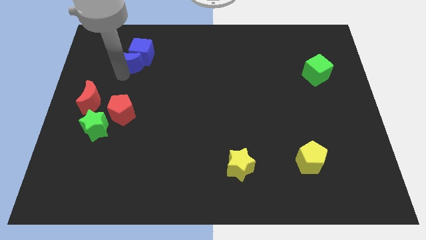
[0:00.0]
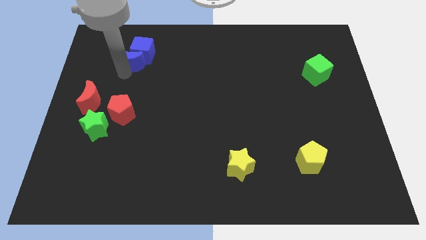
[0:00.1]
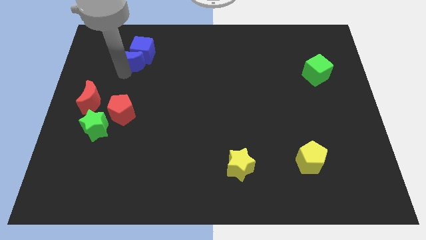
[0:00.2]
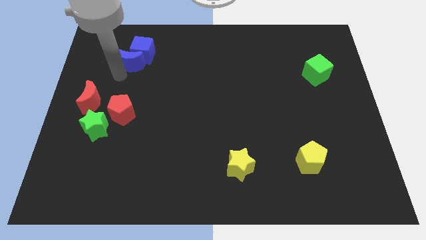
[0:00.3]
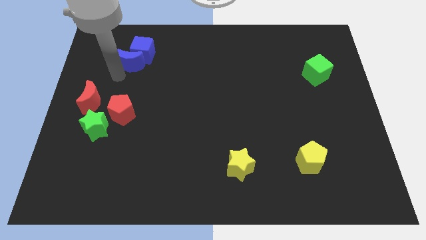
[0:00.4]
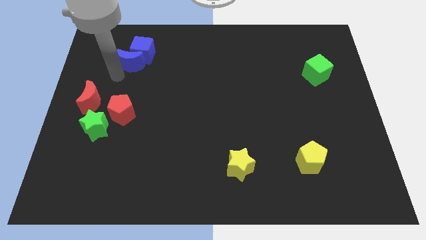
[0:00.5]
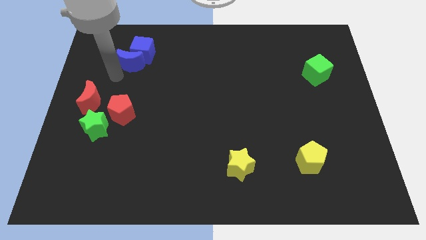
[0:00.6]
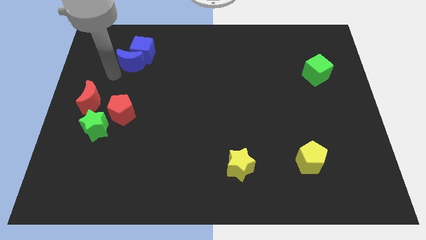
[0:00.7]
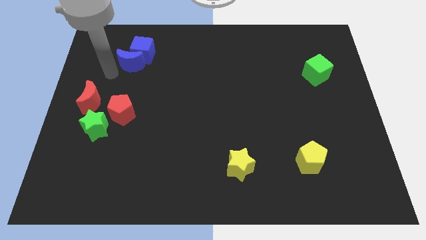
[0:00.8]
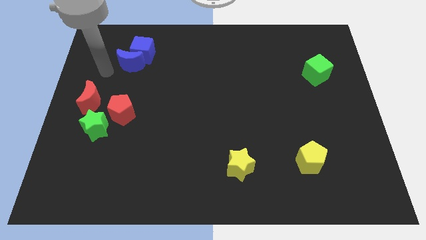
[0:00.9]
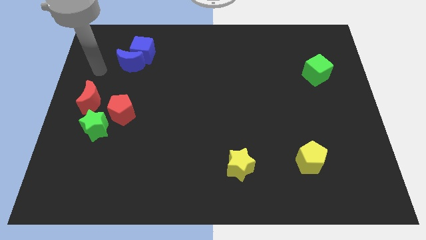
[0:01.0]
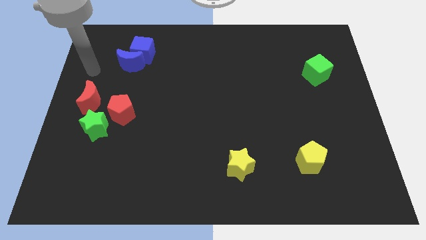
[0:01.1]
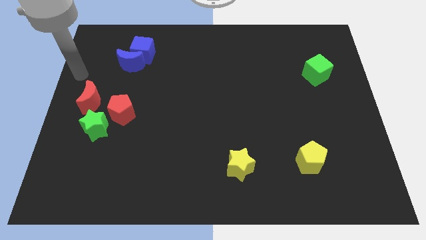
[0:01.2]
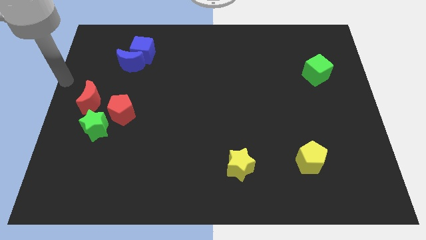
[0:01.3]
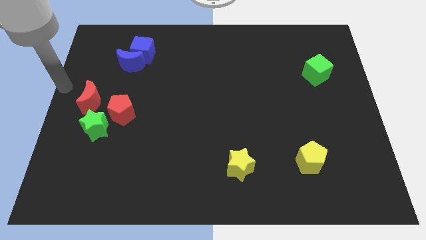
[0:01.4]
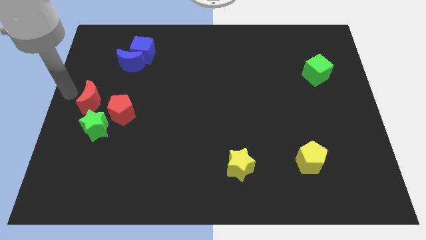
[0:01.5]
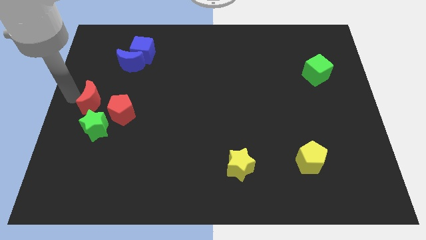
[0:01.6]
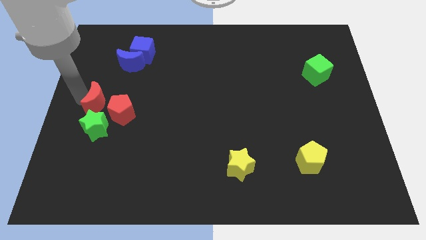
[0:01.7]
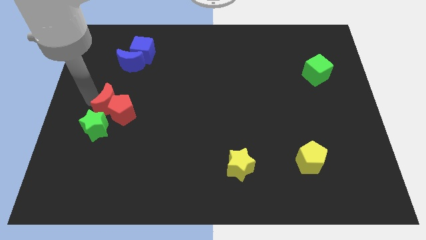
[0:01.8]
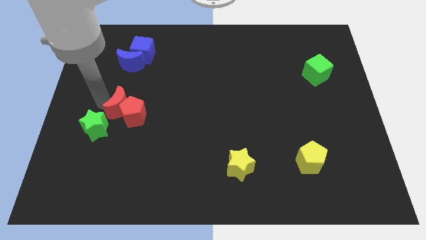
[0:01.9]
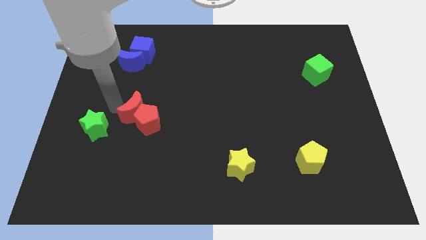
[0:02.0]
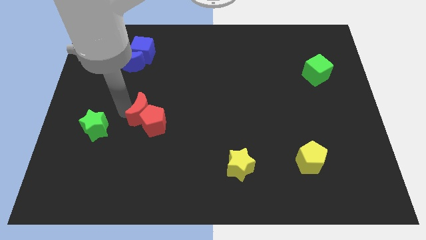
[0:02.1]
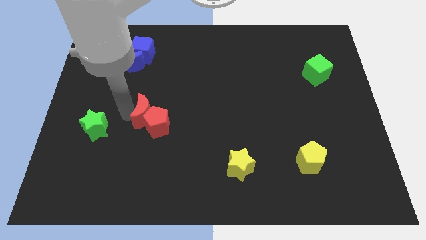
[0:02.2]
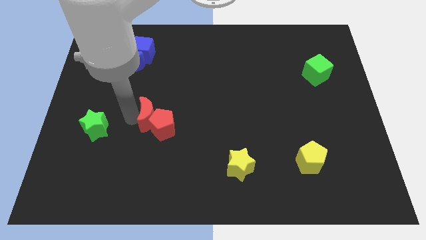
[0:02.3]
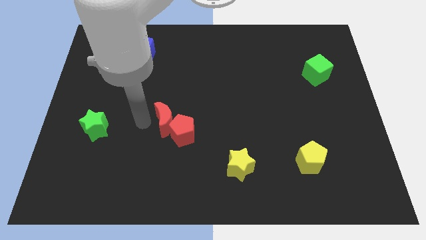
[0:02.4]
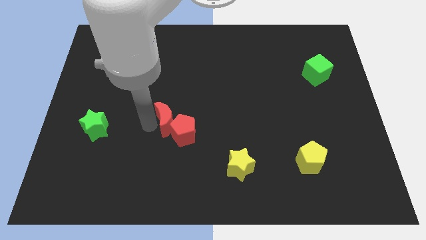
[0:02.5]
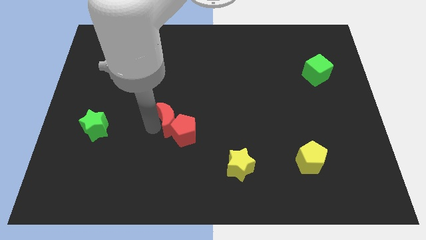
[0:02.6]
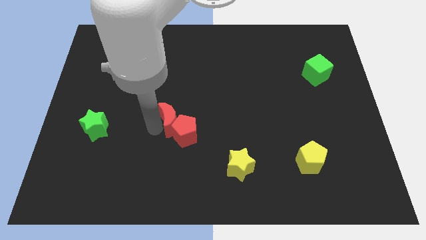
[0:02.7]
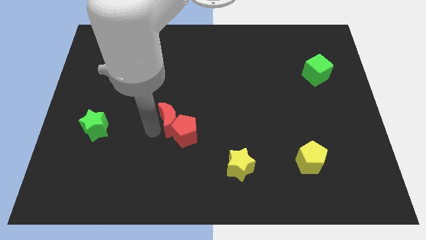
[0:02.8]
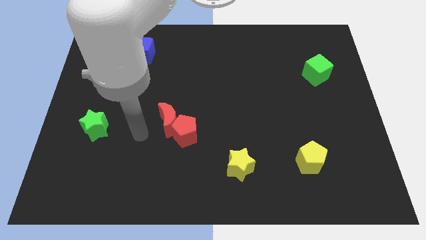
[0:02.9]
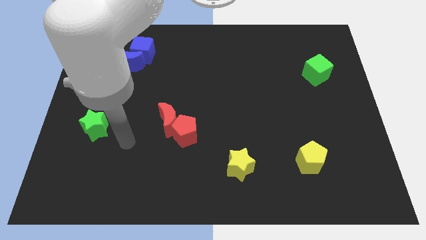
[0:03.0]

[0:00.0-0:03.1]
move the red crescent along with red pentagon towards the center

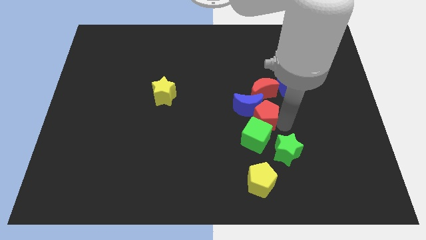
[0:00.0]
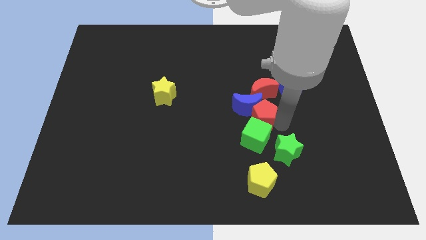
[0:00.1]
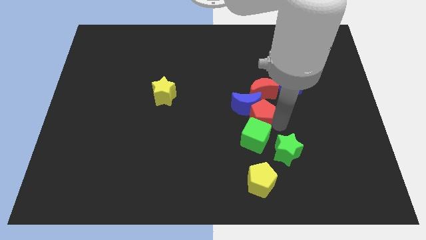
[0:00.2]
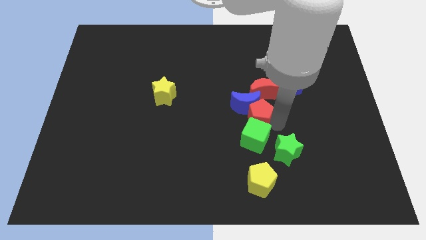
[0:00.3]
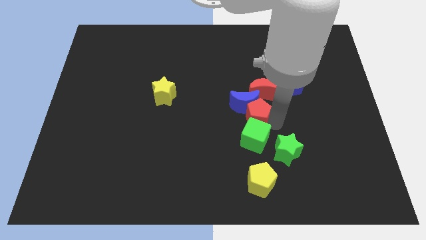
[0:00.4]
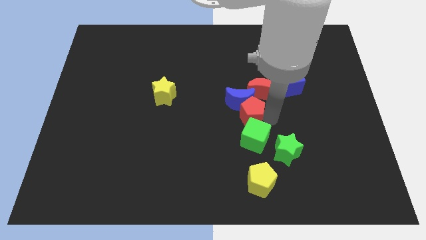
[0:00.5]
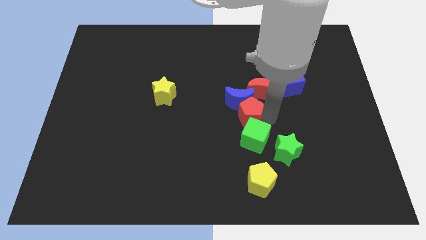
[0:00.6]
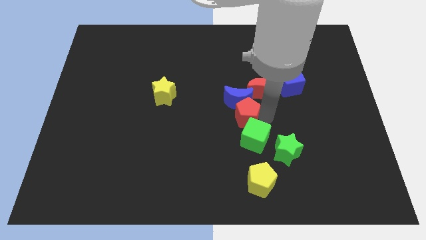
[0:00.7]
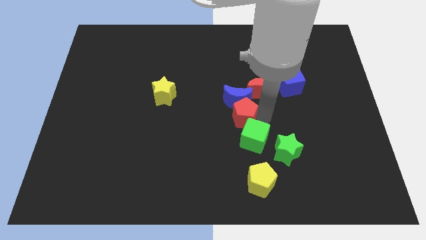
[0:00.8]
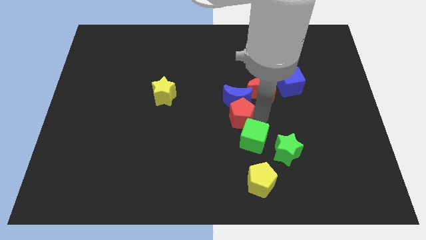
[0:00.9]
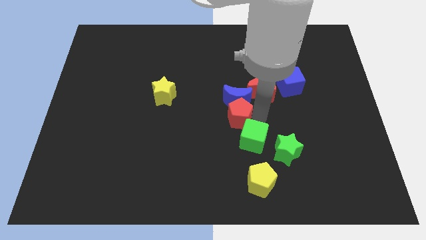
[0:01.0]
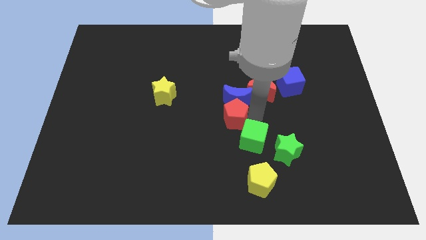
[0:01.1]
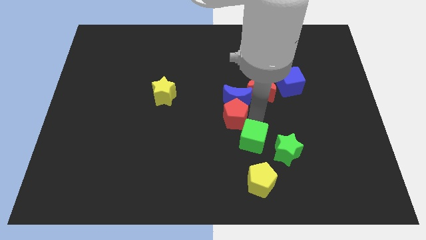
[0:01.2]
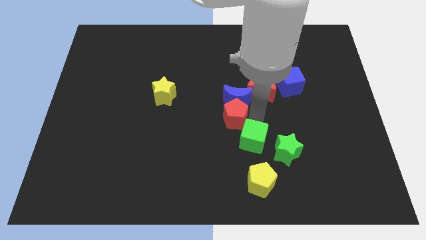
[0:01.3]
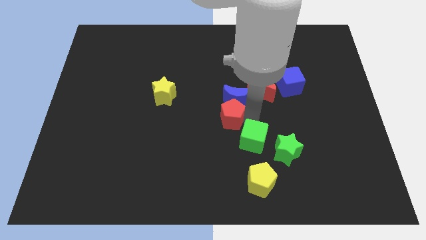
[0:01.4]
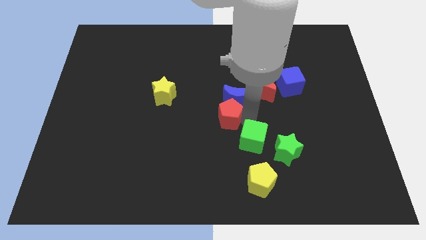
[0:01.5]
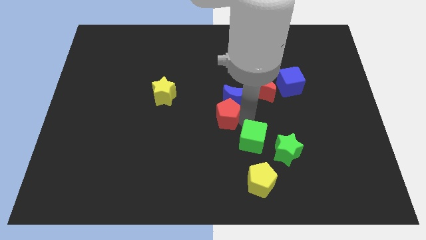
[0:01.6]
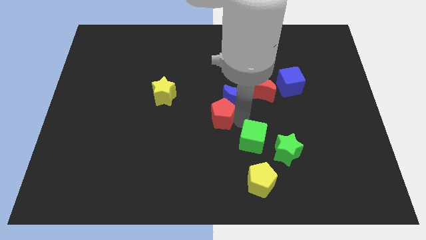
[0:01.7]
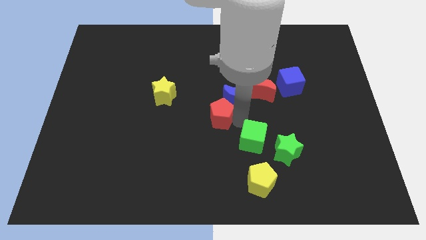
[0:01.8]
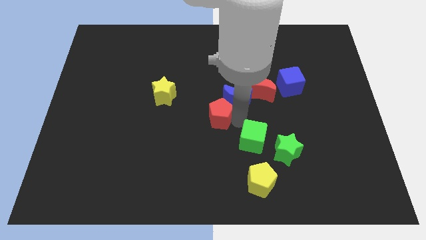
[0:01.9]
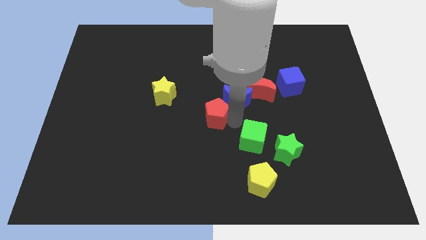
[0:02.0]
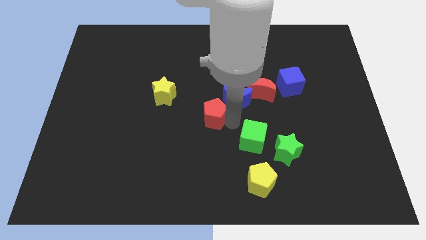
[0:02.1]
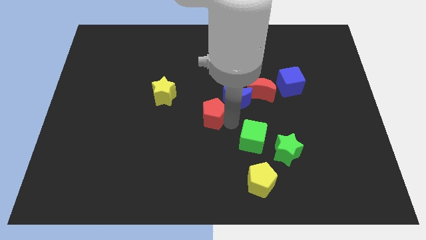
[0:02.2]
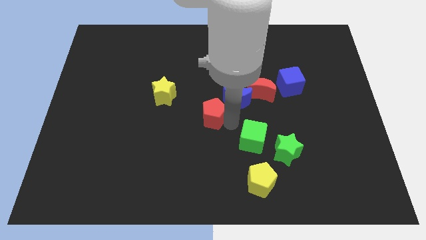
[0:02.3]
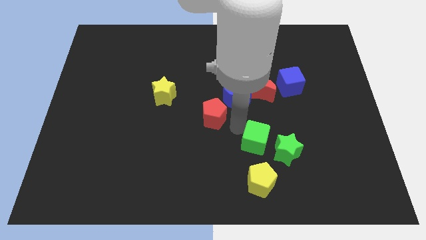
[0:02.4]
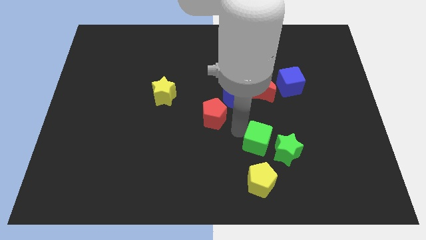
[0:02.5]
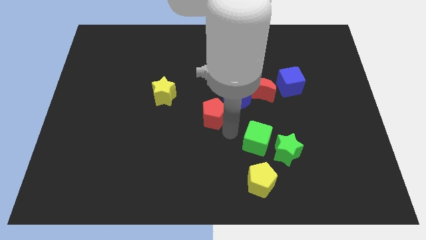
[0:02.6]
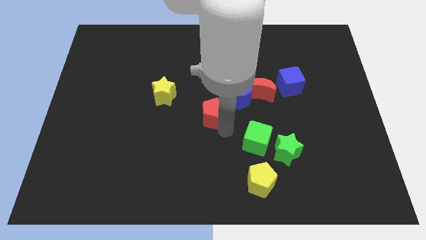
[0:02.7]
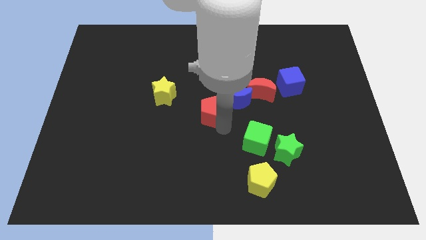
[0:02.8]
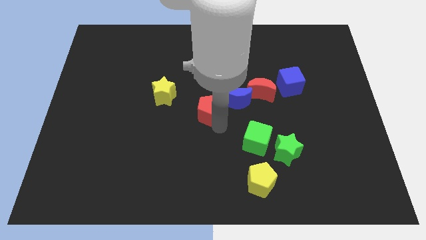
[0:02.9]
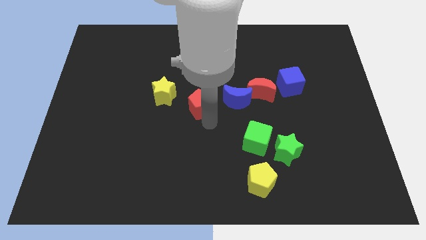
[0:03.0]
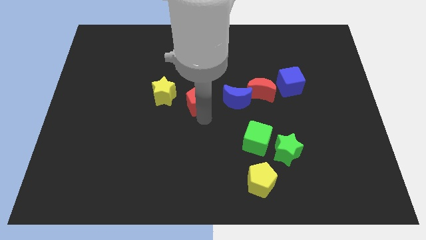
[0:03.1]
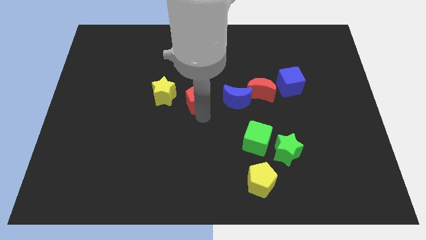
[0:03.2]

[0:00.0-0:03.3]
put red pentagon in between blue moon and yellow star

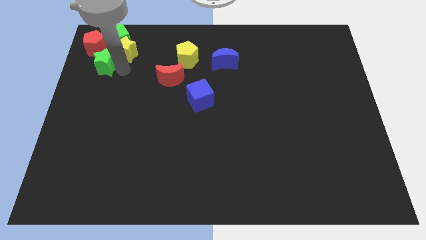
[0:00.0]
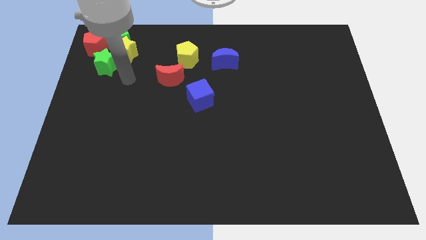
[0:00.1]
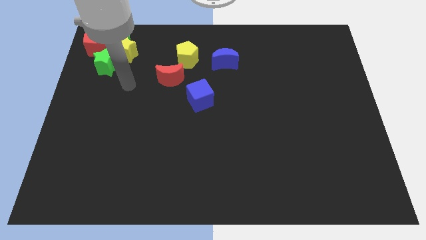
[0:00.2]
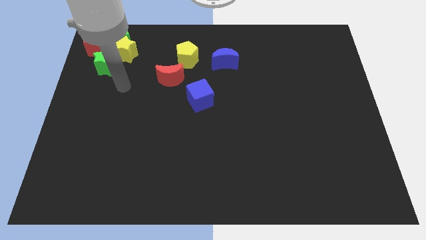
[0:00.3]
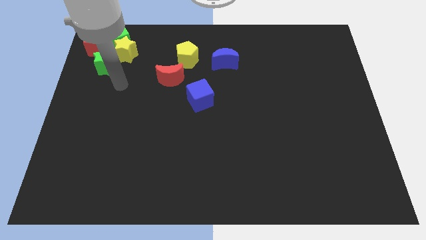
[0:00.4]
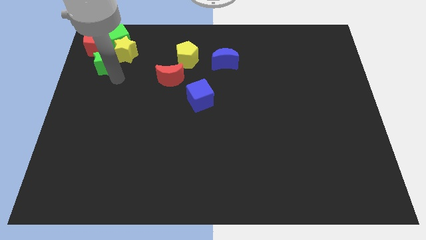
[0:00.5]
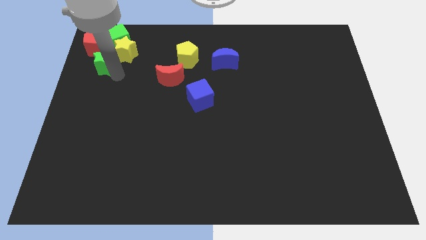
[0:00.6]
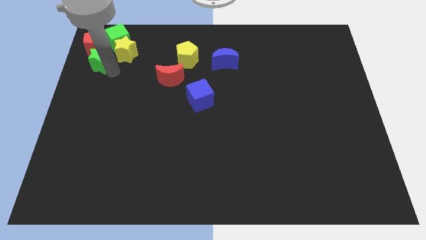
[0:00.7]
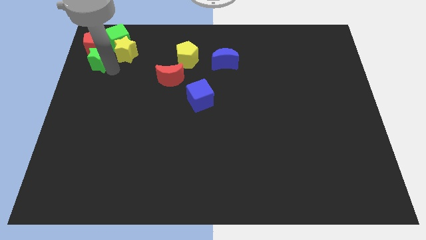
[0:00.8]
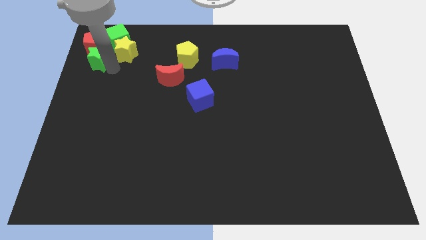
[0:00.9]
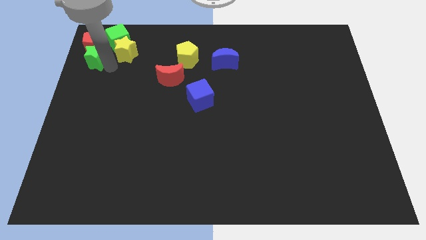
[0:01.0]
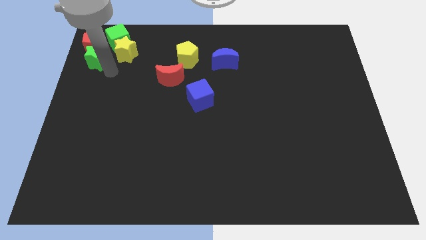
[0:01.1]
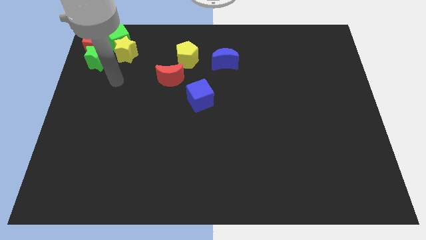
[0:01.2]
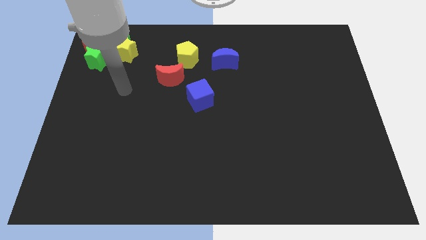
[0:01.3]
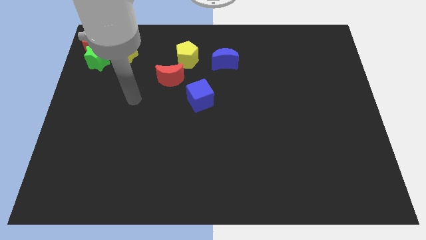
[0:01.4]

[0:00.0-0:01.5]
push the green star to the bottom of the red pentagon on the board

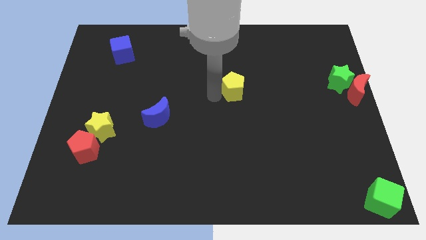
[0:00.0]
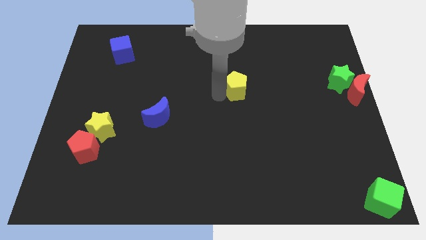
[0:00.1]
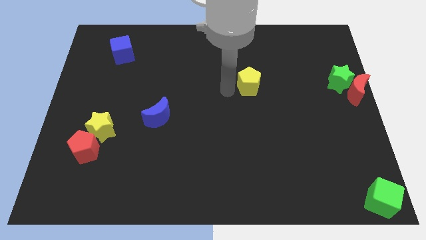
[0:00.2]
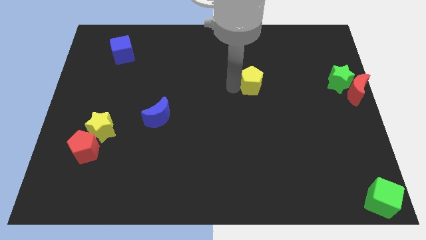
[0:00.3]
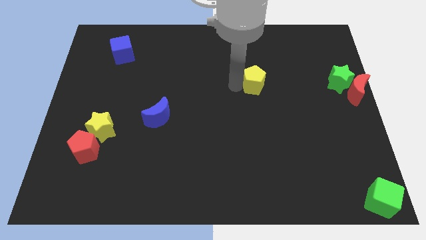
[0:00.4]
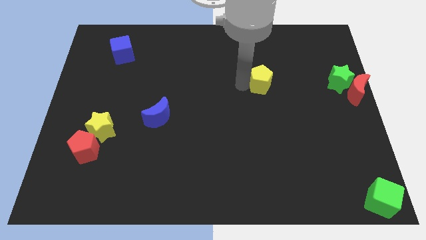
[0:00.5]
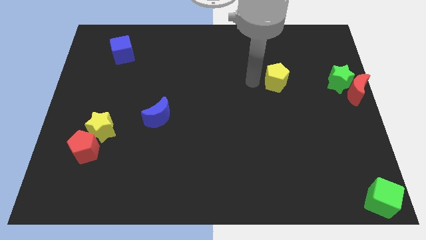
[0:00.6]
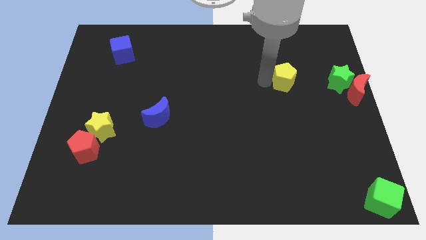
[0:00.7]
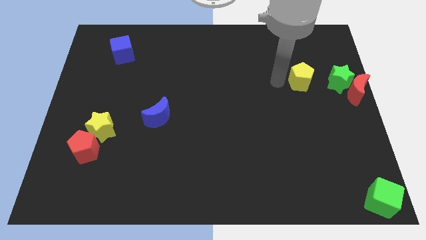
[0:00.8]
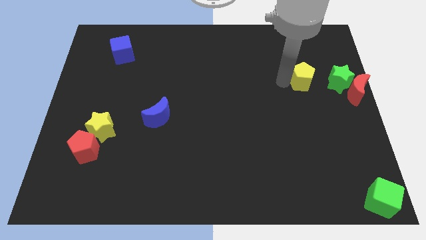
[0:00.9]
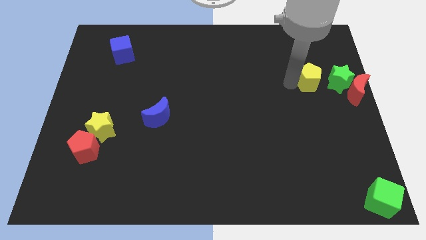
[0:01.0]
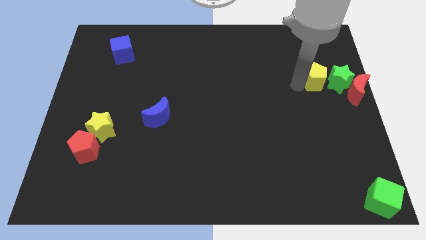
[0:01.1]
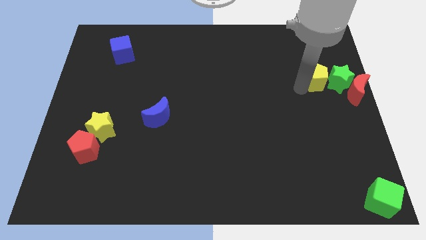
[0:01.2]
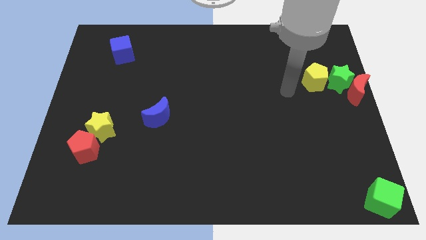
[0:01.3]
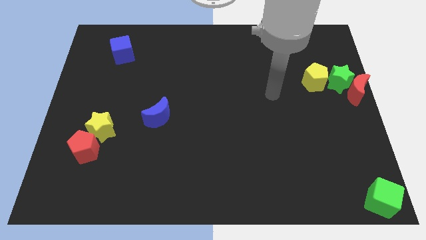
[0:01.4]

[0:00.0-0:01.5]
place the yellow pentagon left to the green star
